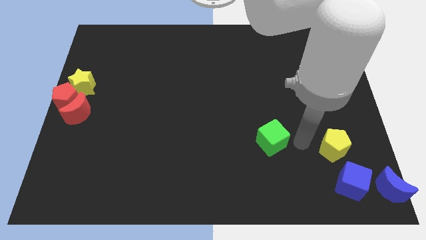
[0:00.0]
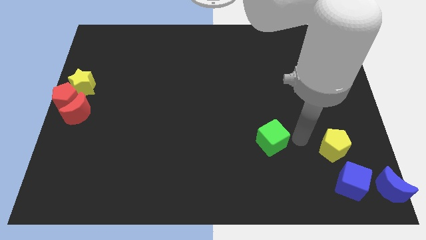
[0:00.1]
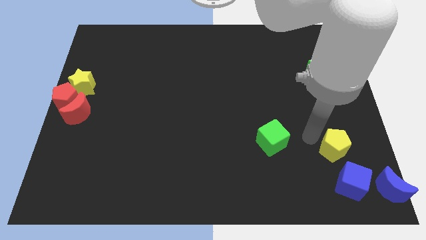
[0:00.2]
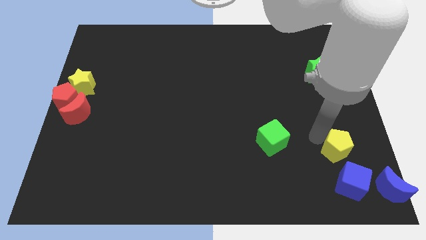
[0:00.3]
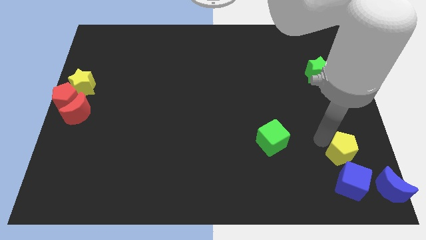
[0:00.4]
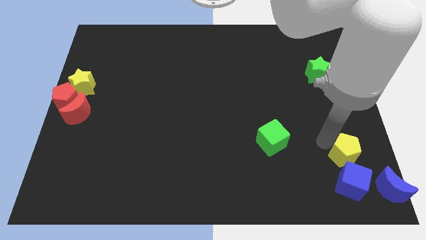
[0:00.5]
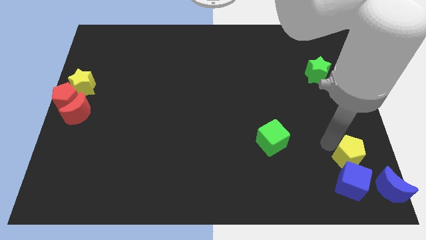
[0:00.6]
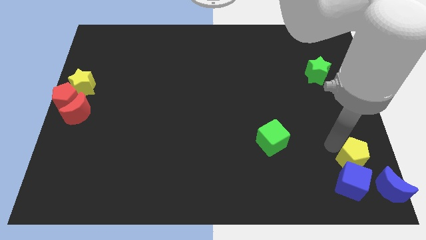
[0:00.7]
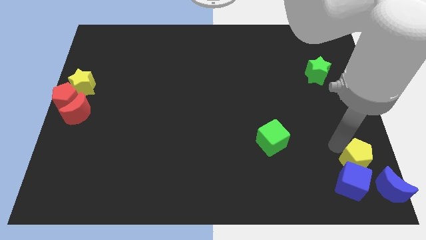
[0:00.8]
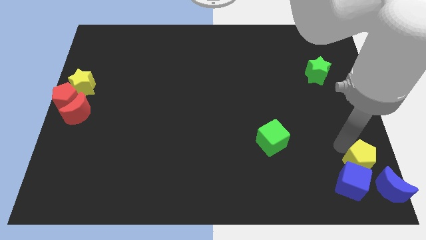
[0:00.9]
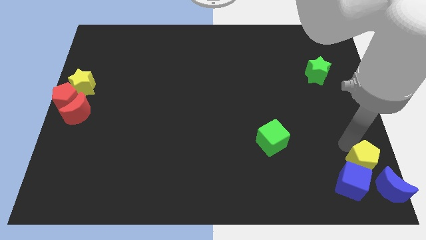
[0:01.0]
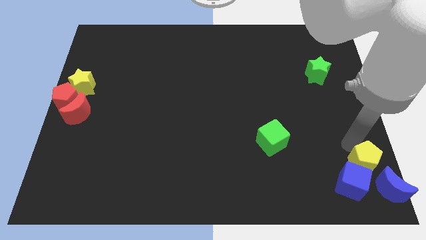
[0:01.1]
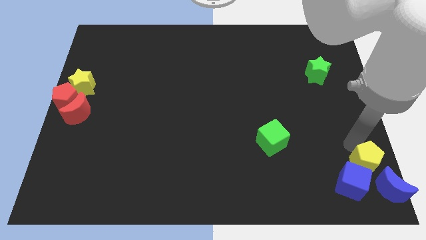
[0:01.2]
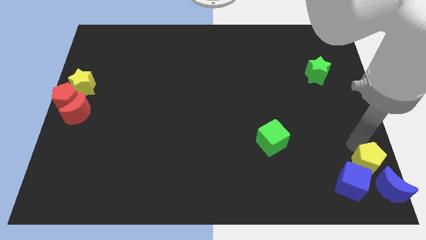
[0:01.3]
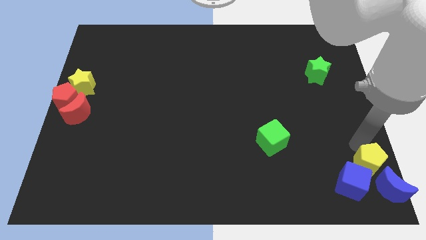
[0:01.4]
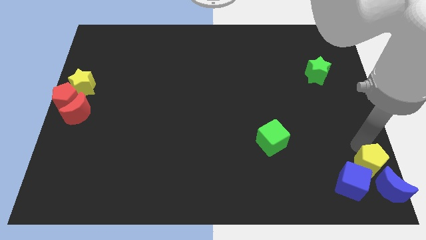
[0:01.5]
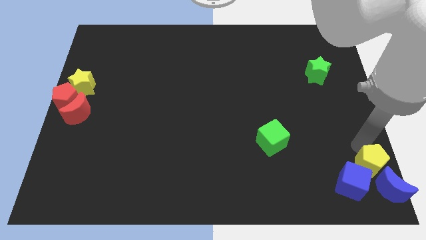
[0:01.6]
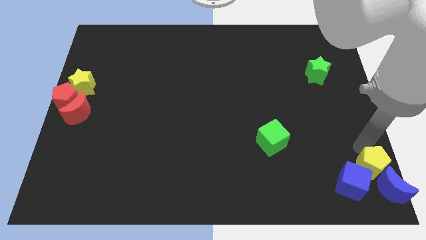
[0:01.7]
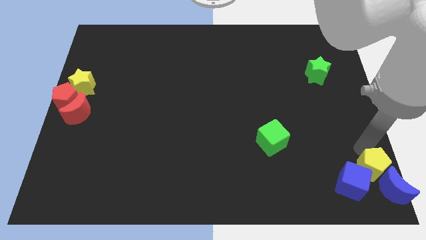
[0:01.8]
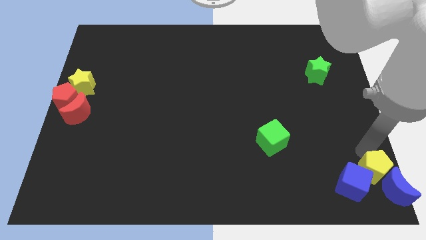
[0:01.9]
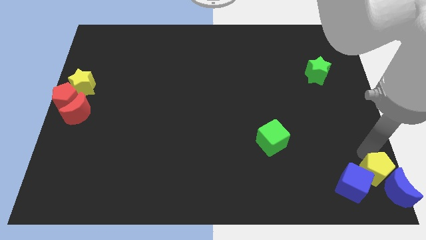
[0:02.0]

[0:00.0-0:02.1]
push the yellow pentagon into the blue cube and blue moon

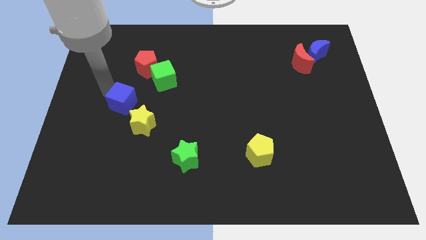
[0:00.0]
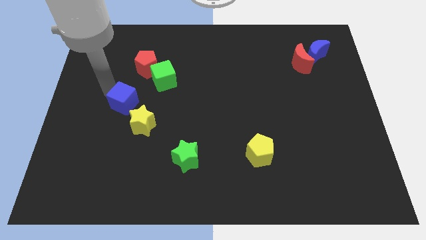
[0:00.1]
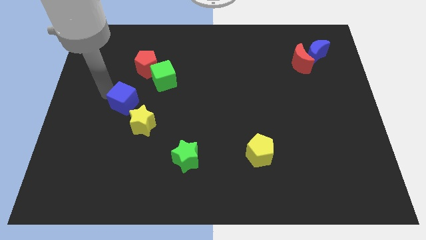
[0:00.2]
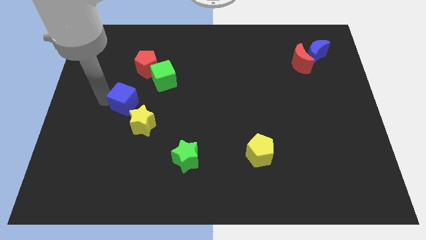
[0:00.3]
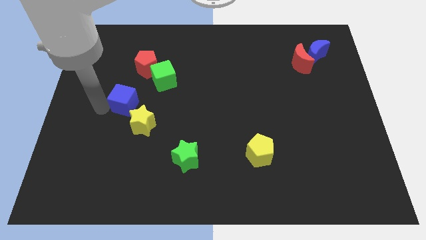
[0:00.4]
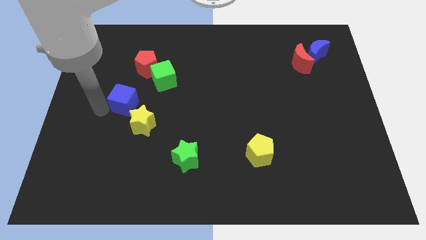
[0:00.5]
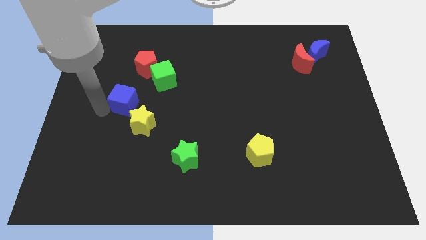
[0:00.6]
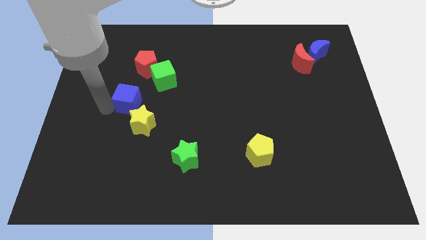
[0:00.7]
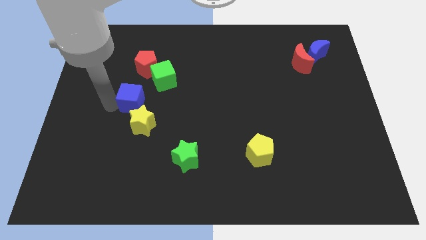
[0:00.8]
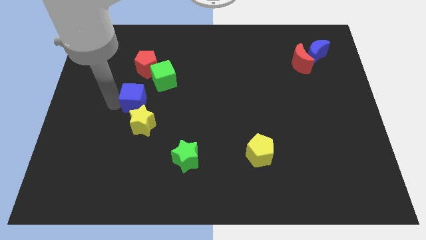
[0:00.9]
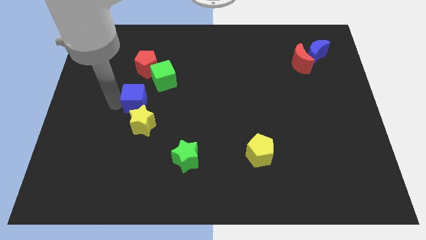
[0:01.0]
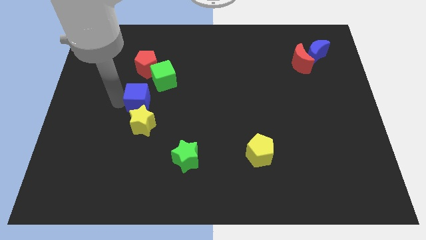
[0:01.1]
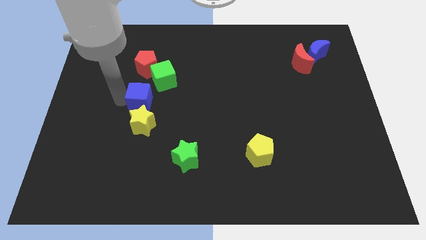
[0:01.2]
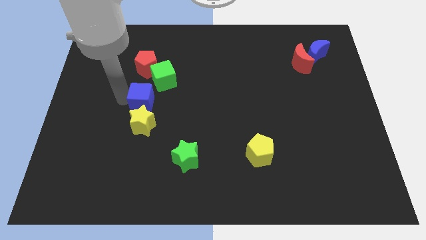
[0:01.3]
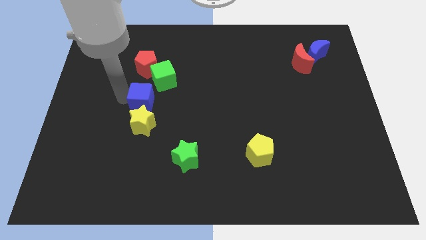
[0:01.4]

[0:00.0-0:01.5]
place blue cube slightly to the right

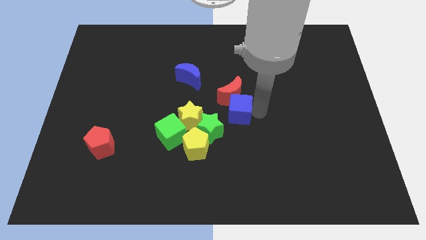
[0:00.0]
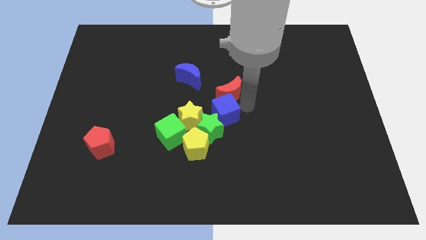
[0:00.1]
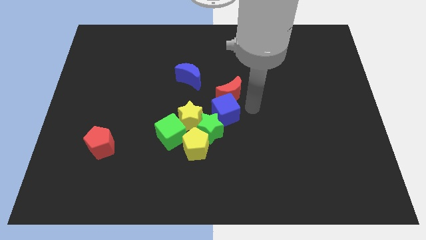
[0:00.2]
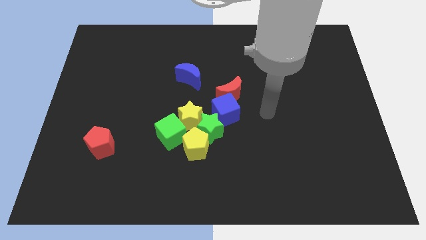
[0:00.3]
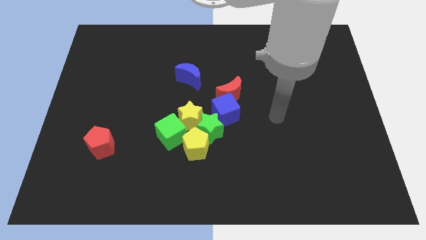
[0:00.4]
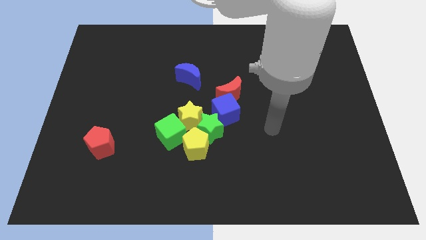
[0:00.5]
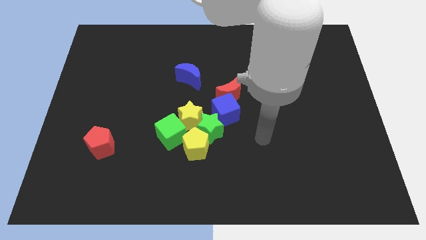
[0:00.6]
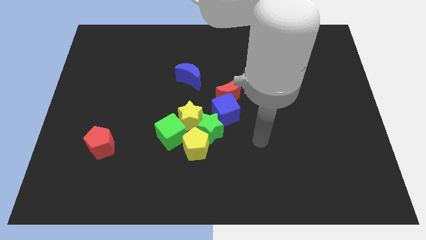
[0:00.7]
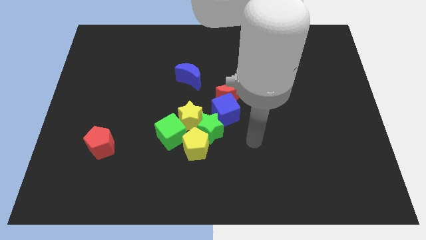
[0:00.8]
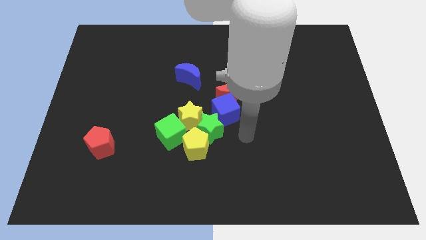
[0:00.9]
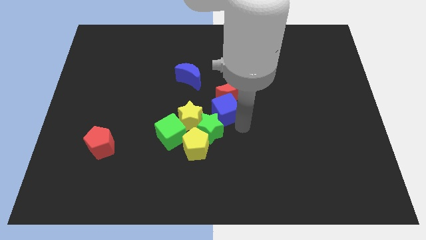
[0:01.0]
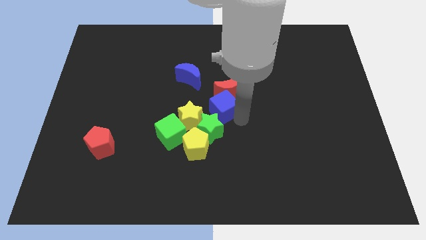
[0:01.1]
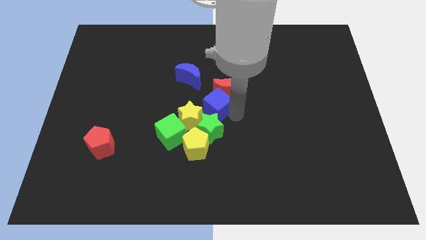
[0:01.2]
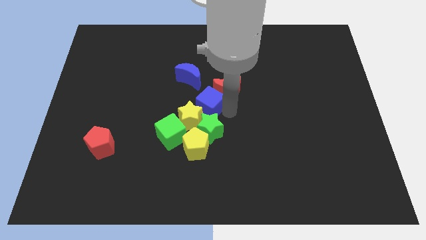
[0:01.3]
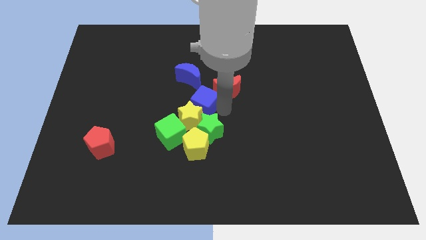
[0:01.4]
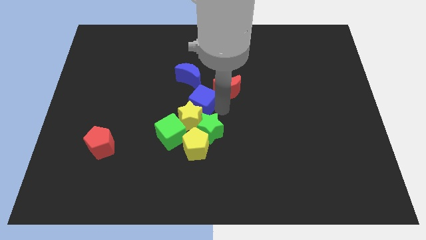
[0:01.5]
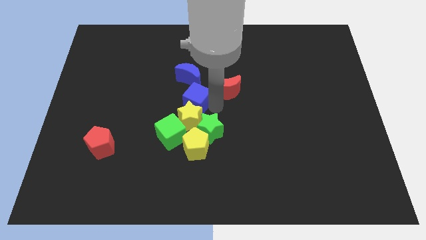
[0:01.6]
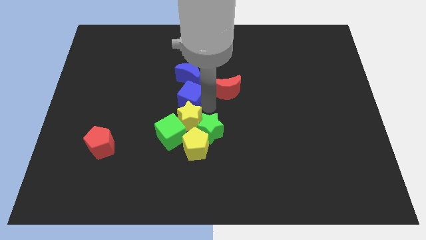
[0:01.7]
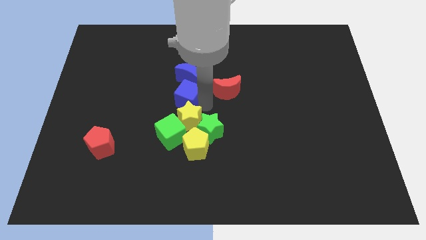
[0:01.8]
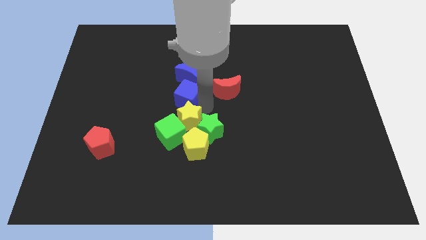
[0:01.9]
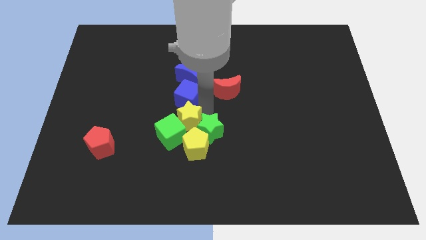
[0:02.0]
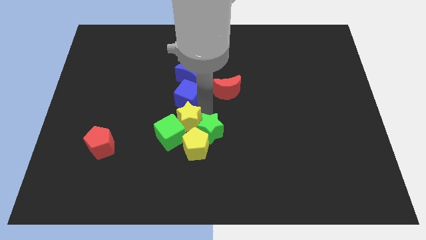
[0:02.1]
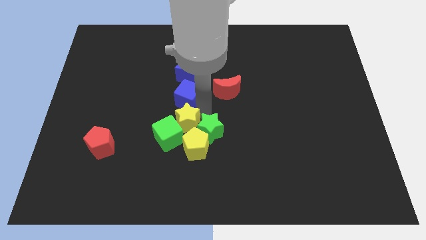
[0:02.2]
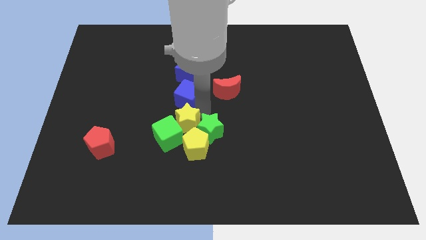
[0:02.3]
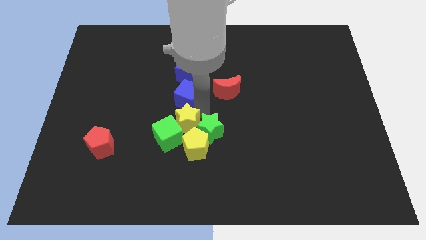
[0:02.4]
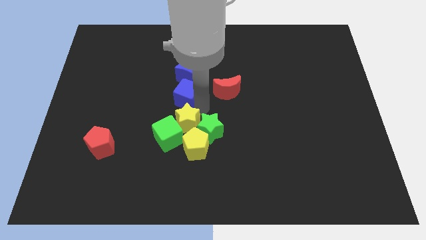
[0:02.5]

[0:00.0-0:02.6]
put the blue cube in between the yellow star and blue moon

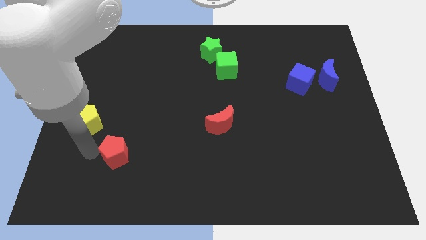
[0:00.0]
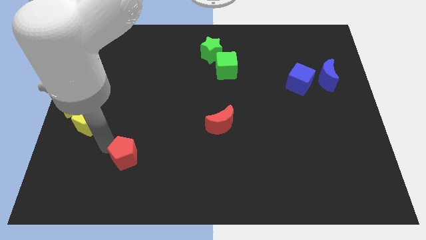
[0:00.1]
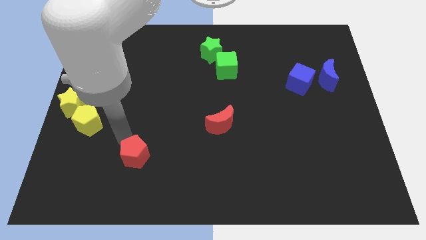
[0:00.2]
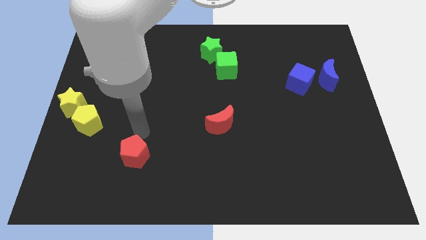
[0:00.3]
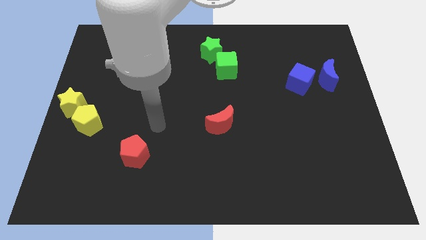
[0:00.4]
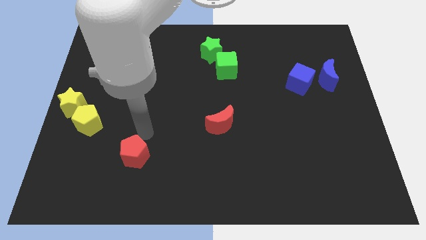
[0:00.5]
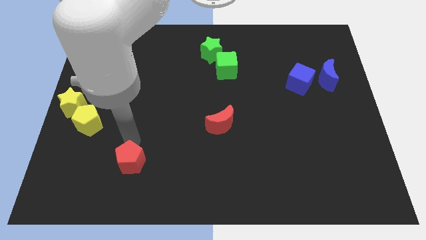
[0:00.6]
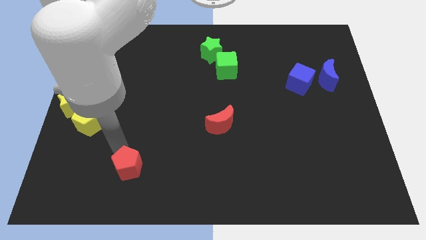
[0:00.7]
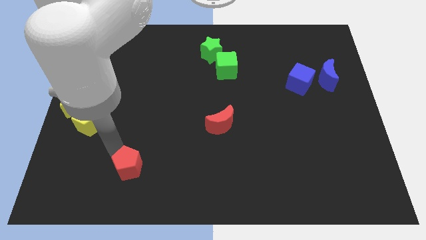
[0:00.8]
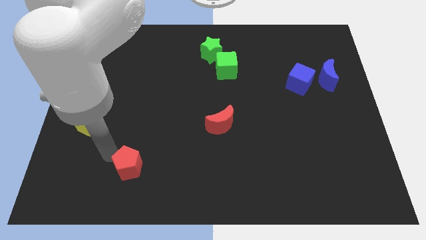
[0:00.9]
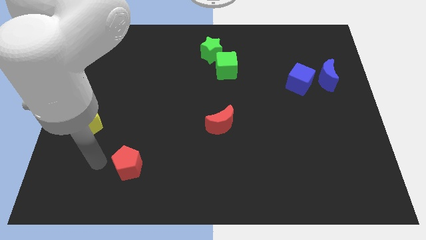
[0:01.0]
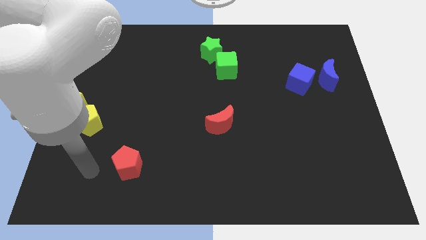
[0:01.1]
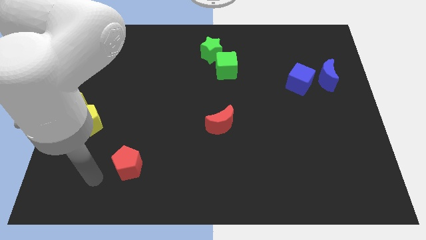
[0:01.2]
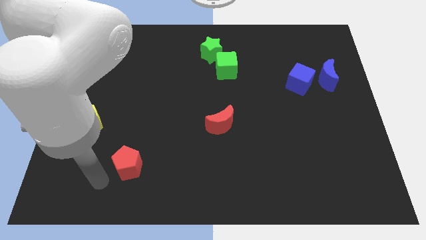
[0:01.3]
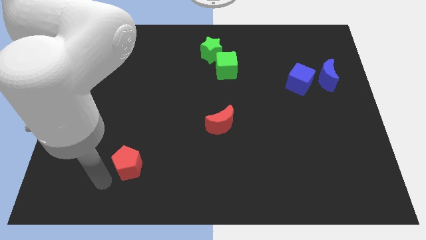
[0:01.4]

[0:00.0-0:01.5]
move red pentagon slightly downwards

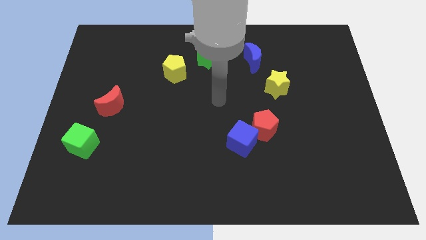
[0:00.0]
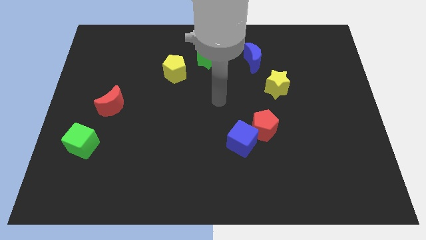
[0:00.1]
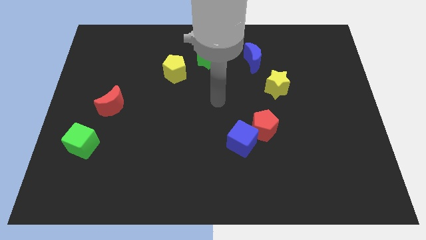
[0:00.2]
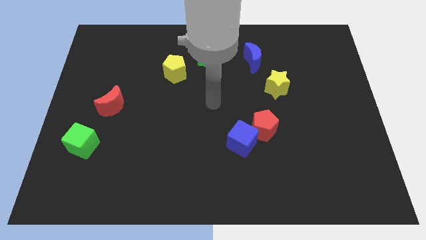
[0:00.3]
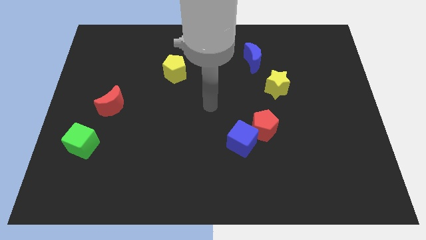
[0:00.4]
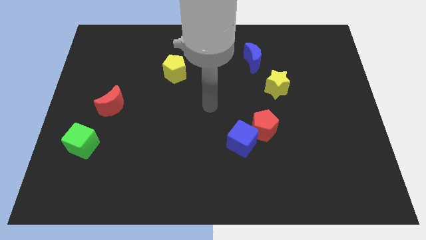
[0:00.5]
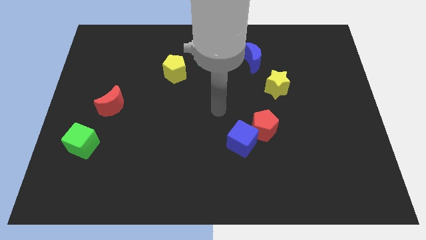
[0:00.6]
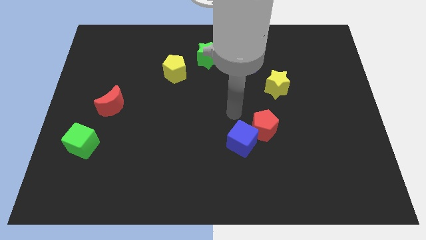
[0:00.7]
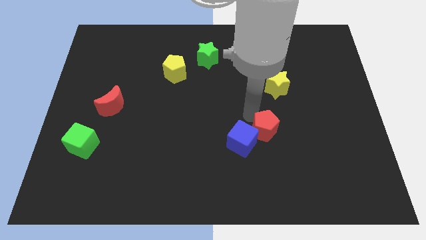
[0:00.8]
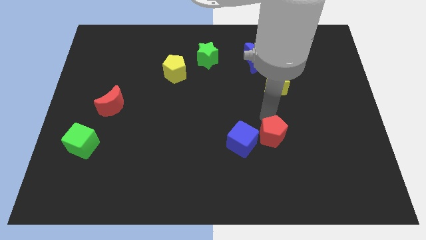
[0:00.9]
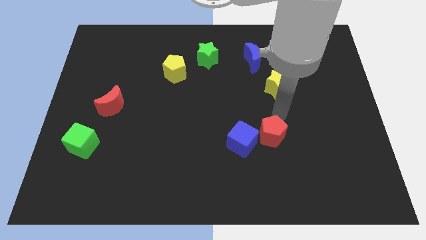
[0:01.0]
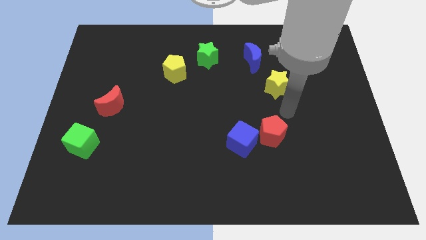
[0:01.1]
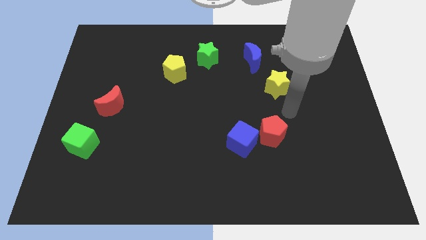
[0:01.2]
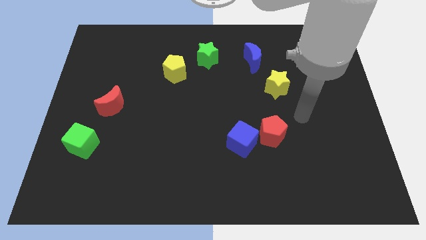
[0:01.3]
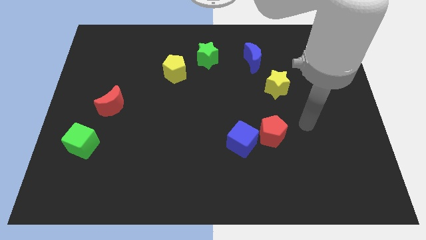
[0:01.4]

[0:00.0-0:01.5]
slightly push the red pentagon diagonally to the blue cube
